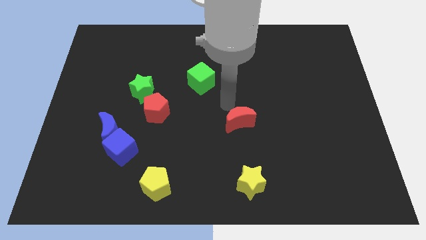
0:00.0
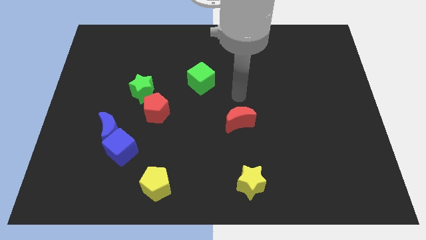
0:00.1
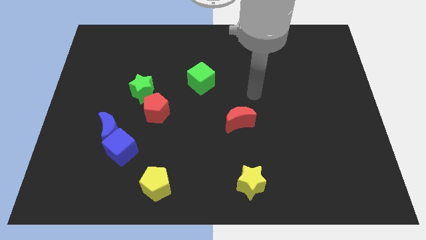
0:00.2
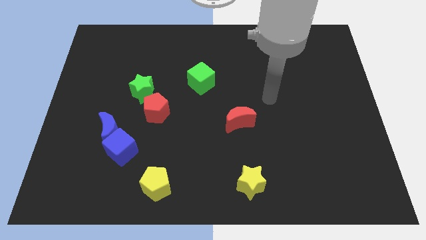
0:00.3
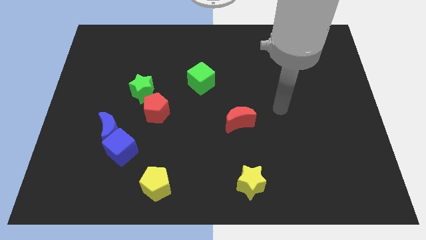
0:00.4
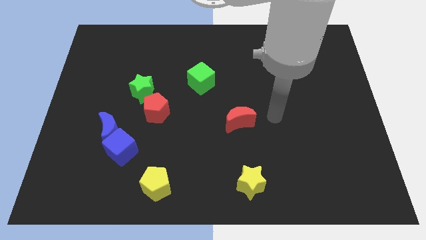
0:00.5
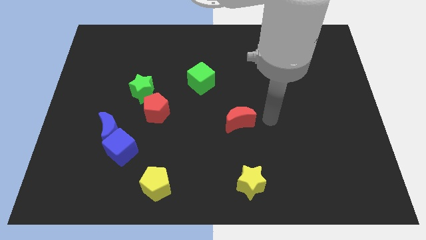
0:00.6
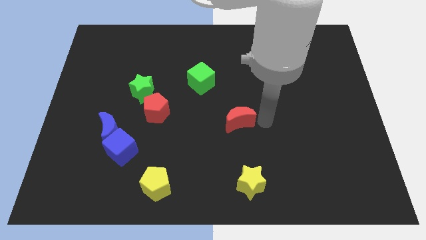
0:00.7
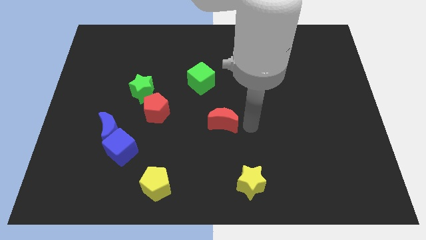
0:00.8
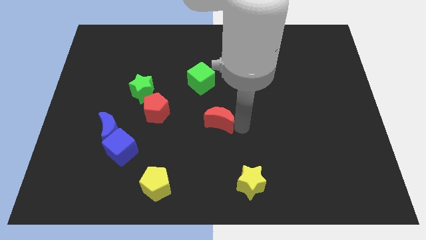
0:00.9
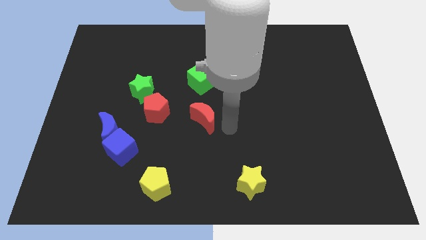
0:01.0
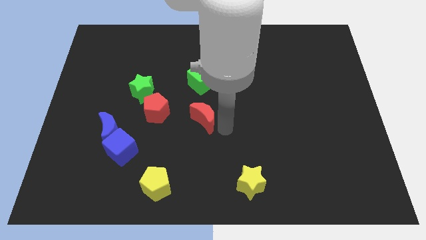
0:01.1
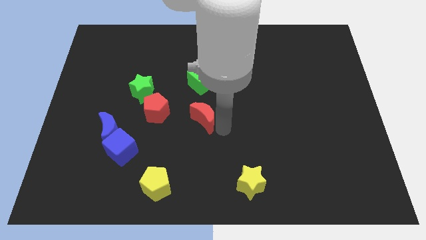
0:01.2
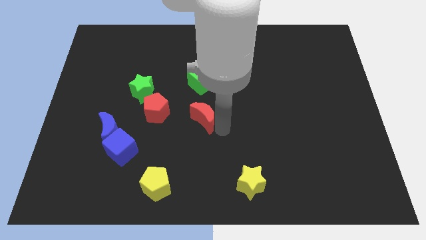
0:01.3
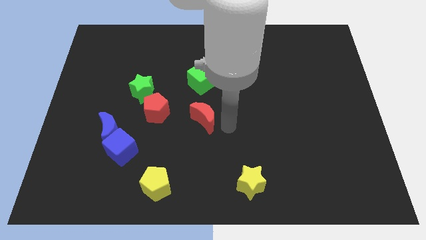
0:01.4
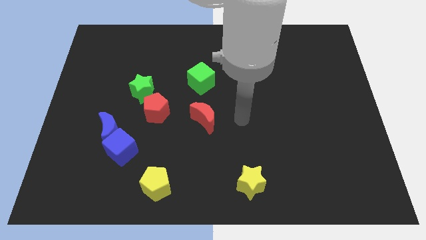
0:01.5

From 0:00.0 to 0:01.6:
move the red moon vertically below the green cube

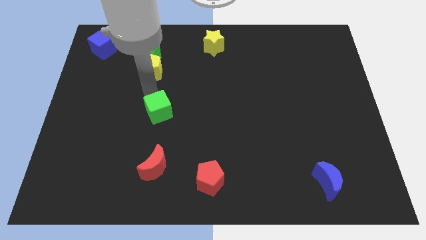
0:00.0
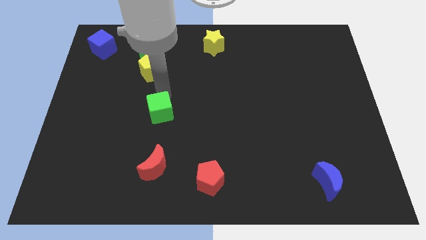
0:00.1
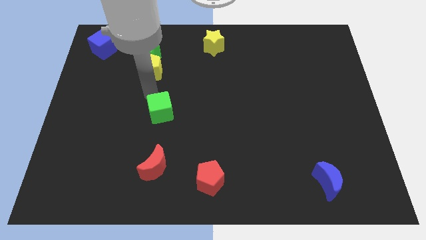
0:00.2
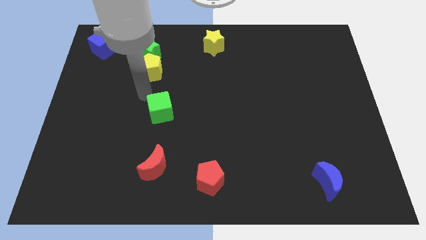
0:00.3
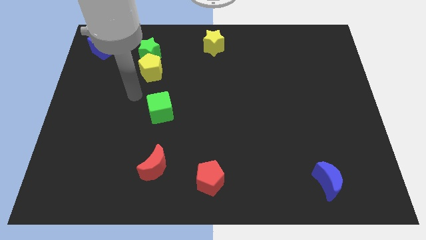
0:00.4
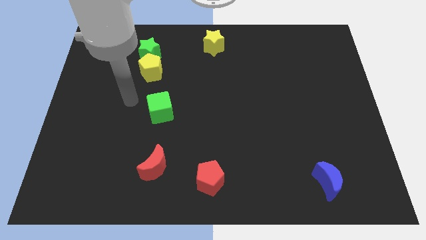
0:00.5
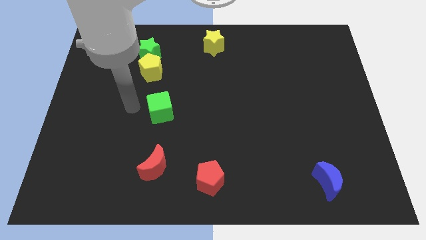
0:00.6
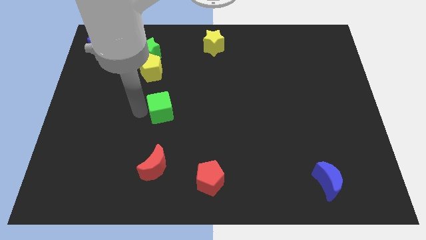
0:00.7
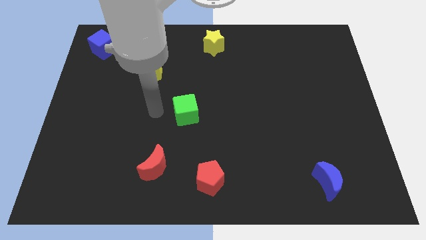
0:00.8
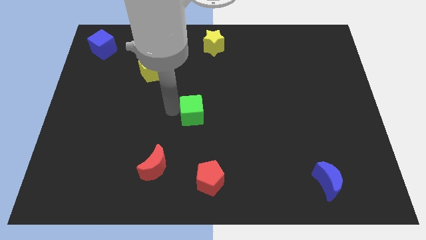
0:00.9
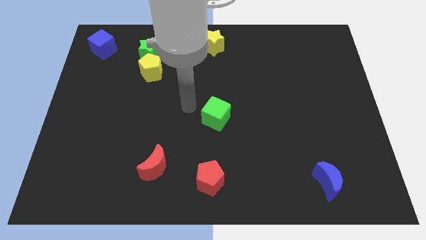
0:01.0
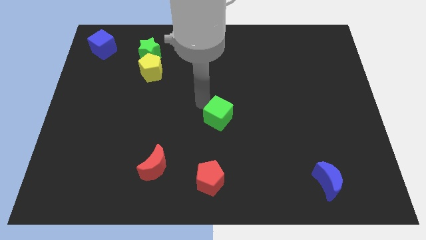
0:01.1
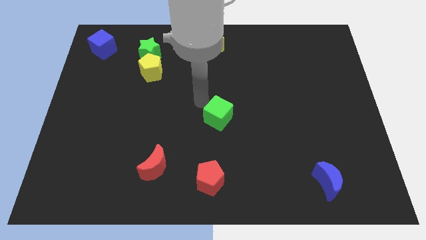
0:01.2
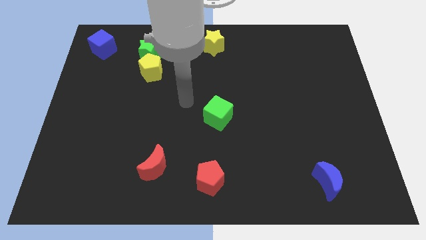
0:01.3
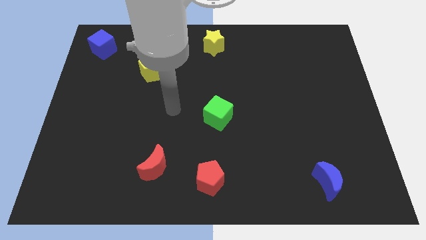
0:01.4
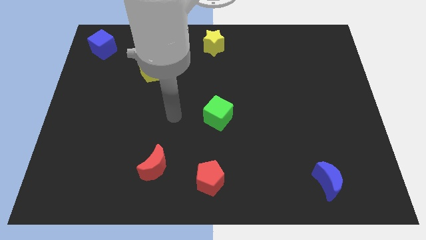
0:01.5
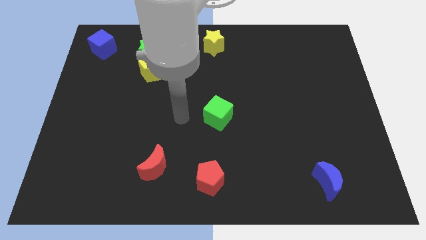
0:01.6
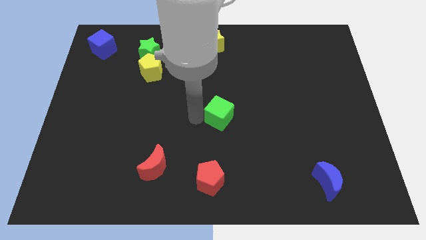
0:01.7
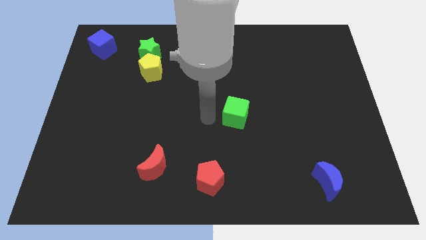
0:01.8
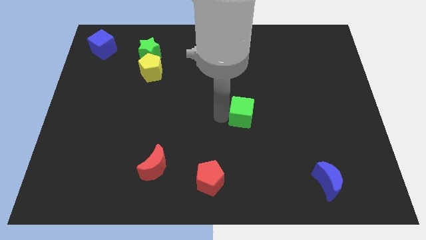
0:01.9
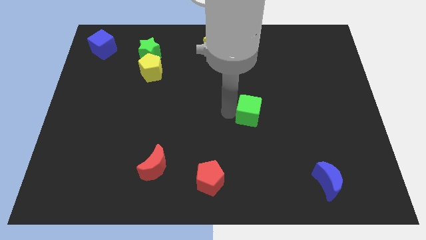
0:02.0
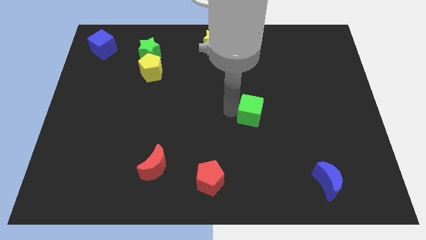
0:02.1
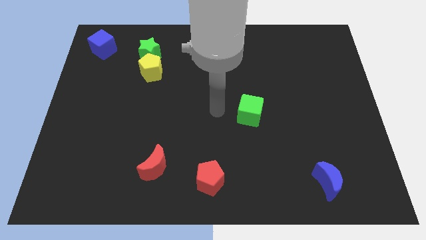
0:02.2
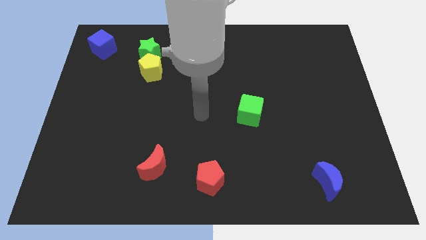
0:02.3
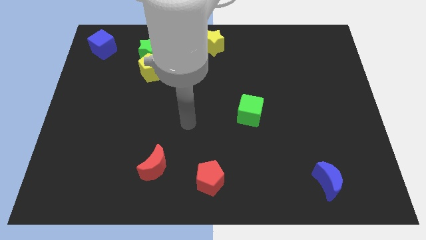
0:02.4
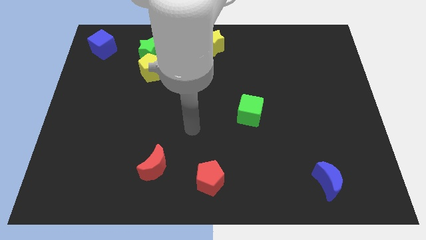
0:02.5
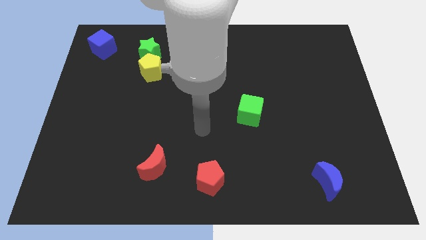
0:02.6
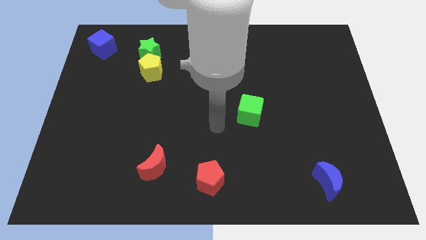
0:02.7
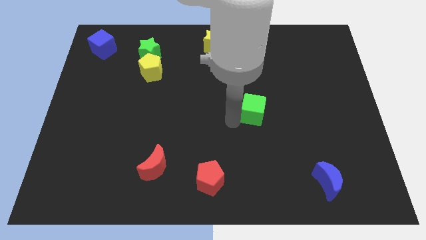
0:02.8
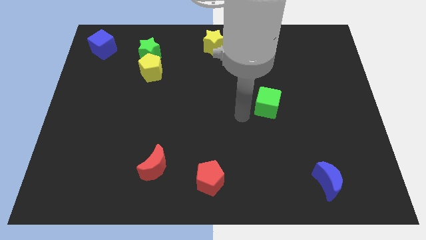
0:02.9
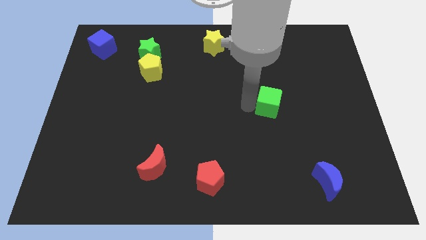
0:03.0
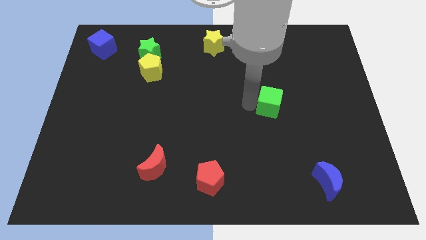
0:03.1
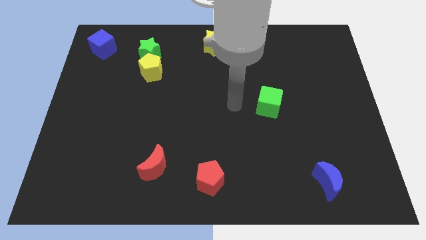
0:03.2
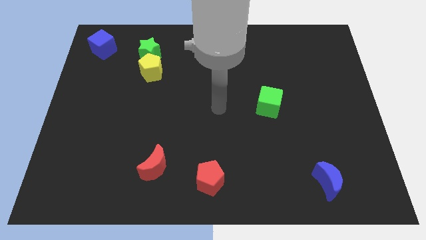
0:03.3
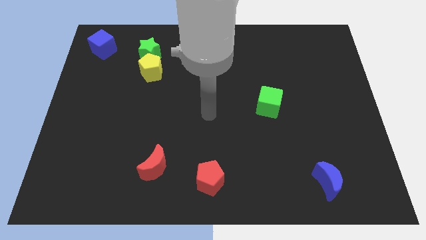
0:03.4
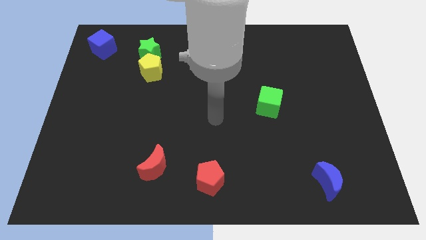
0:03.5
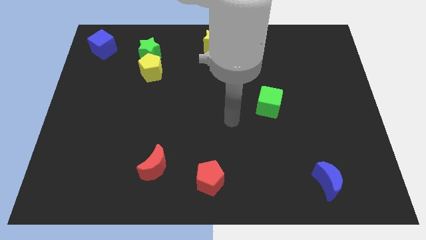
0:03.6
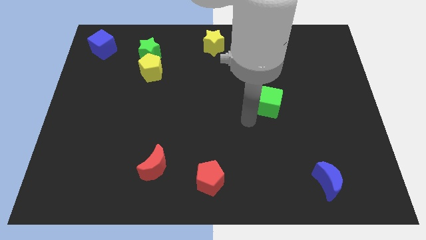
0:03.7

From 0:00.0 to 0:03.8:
drag the green cube to the right

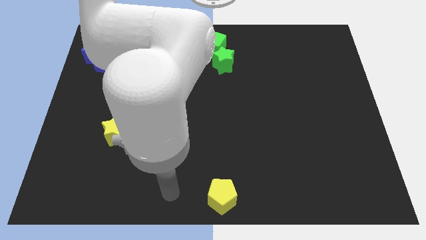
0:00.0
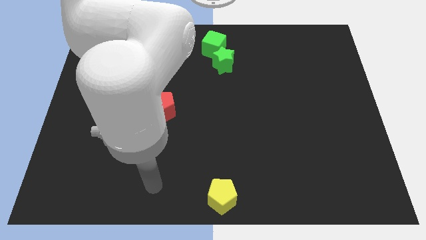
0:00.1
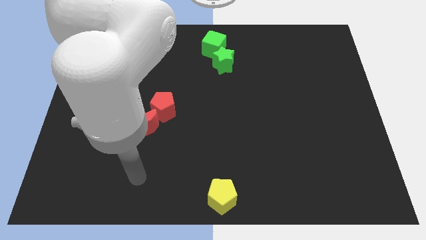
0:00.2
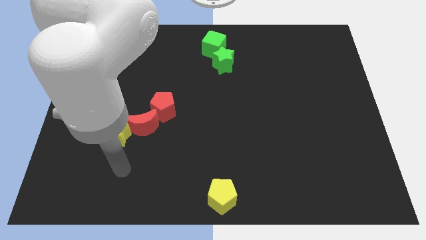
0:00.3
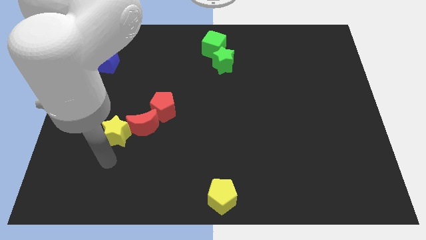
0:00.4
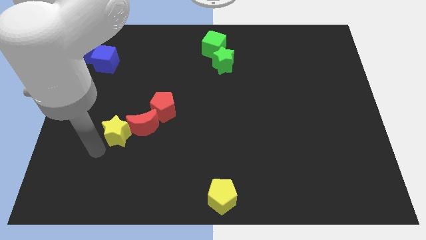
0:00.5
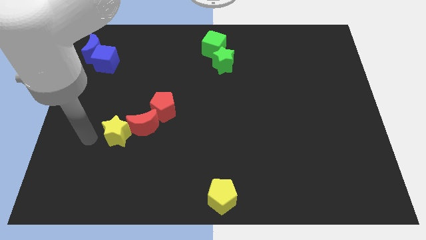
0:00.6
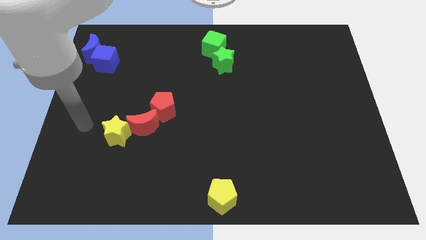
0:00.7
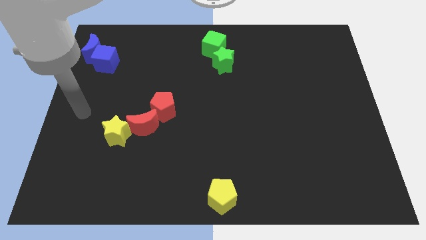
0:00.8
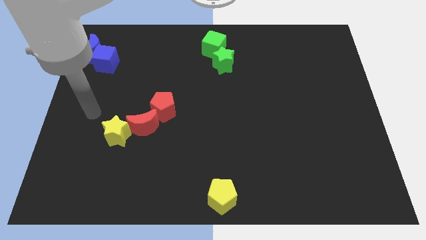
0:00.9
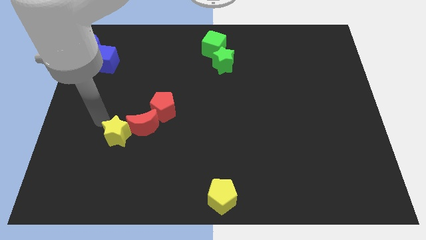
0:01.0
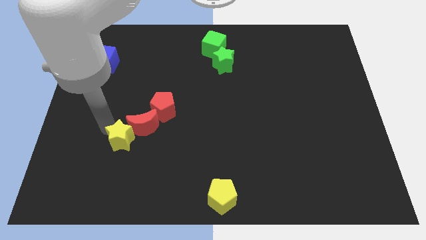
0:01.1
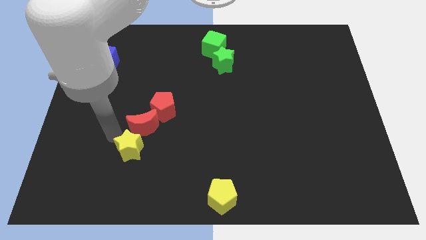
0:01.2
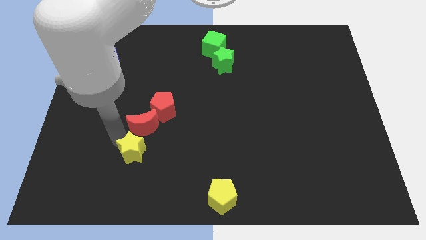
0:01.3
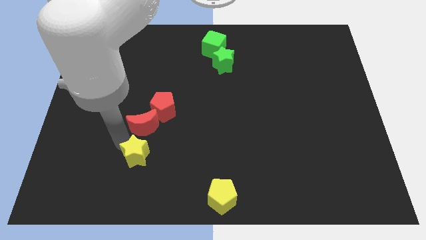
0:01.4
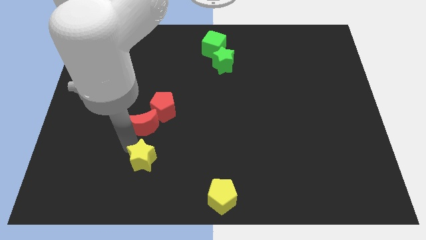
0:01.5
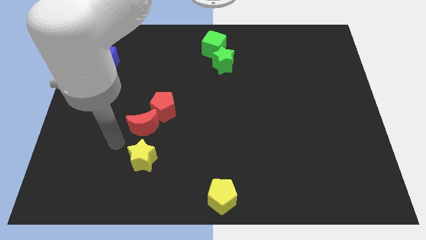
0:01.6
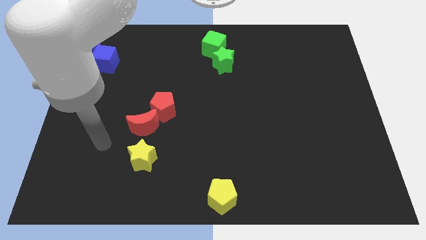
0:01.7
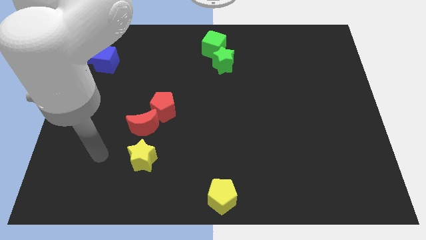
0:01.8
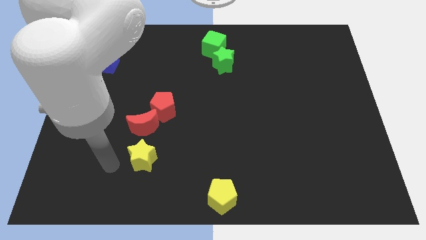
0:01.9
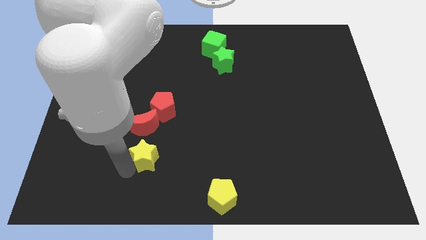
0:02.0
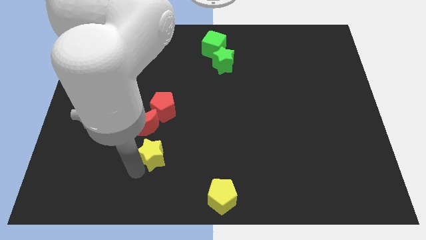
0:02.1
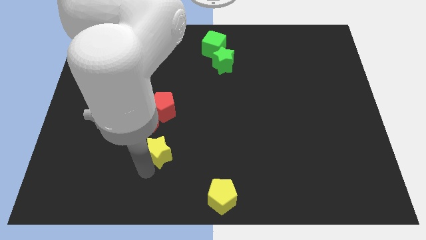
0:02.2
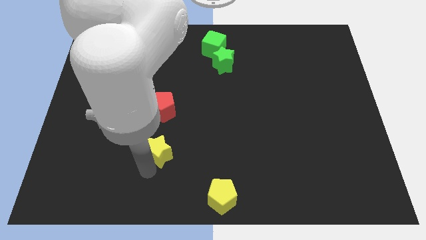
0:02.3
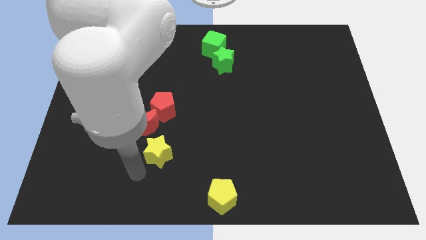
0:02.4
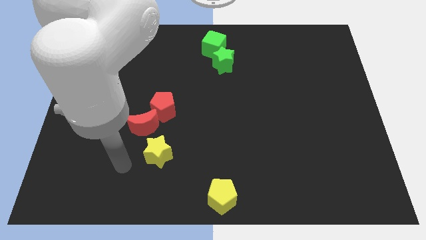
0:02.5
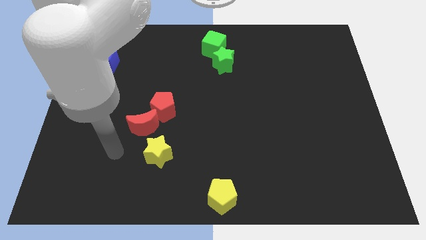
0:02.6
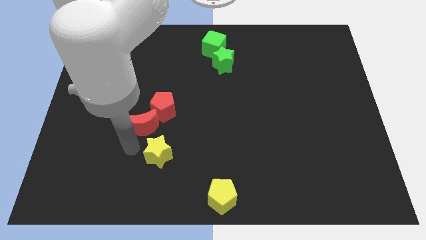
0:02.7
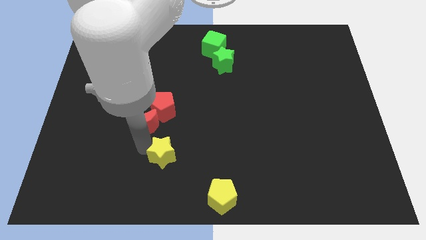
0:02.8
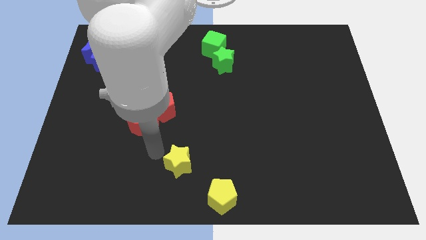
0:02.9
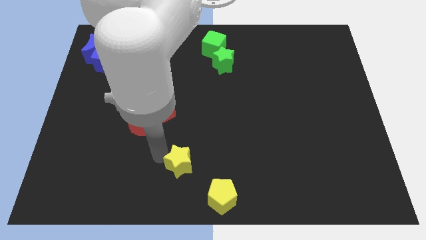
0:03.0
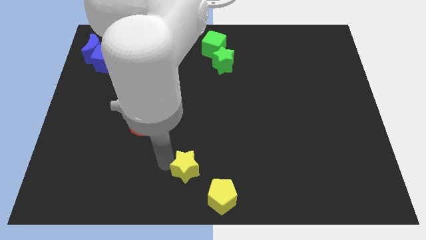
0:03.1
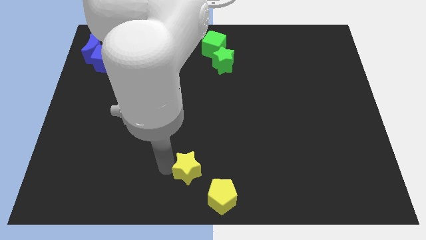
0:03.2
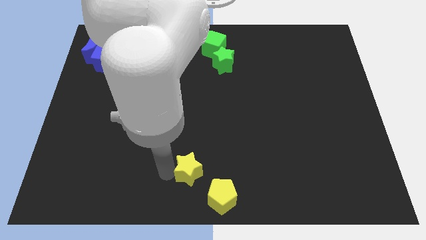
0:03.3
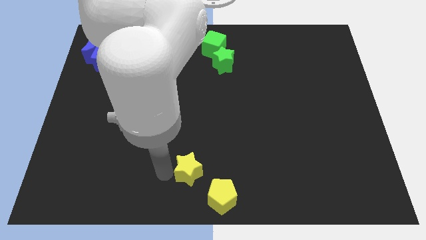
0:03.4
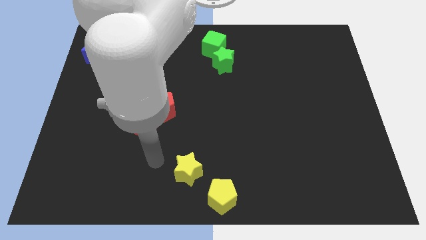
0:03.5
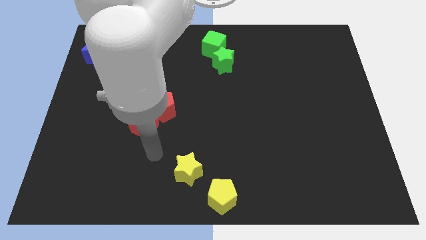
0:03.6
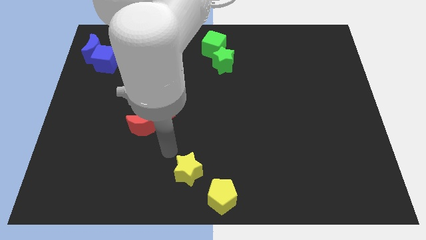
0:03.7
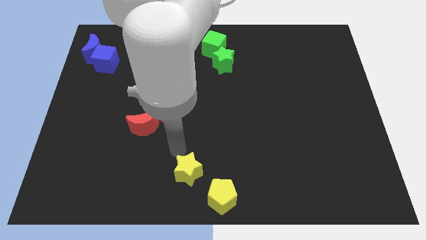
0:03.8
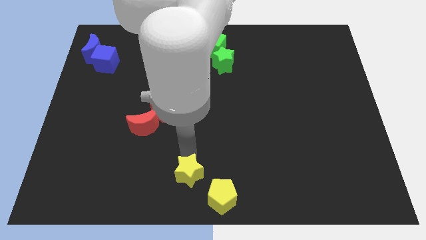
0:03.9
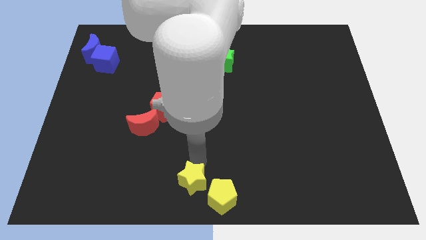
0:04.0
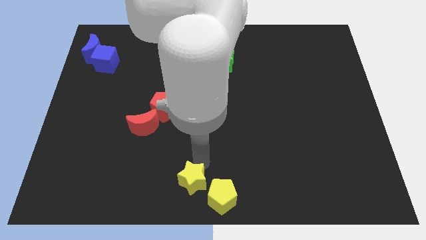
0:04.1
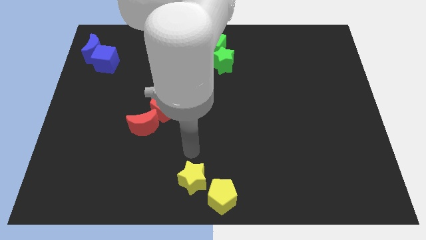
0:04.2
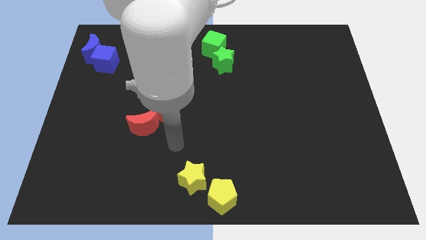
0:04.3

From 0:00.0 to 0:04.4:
place yellow star left to yellow pentagon
